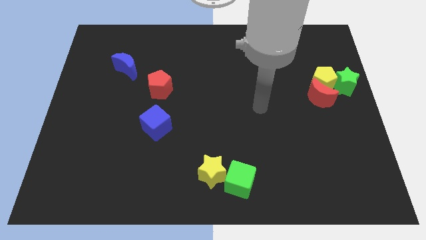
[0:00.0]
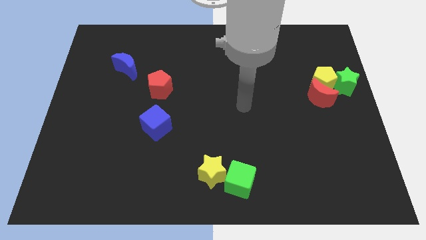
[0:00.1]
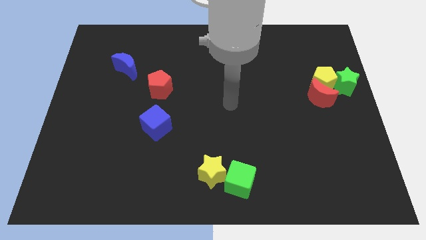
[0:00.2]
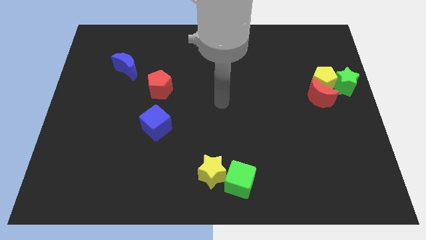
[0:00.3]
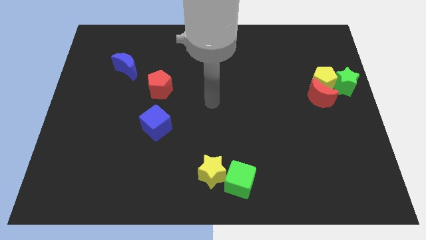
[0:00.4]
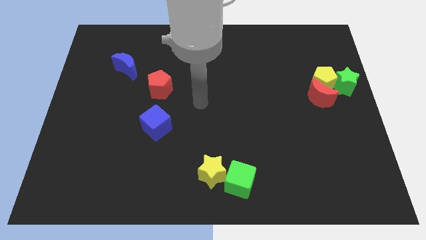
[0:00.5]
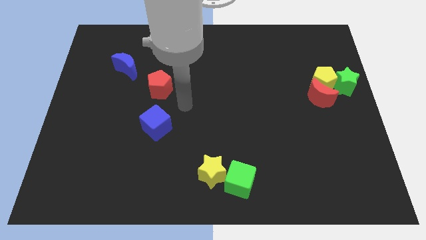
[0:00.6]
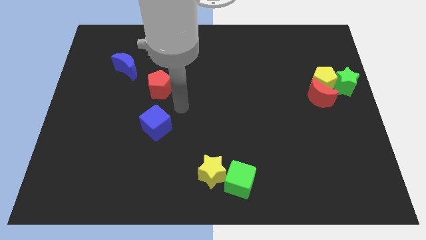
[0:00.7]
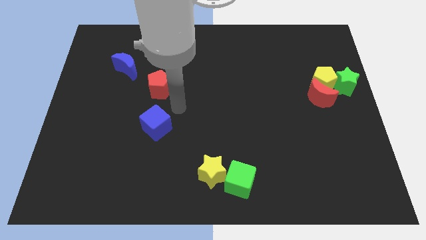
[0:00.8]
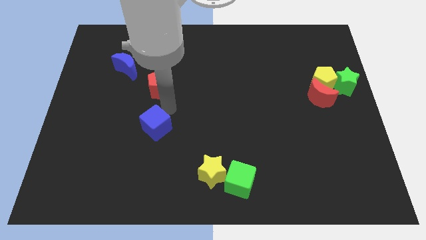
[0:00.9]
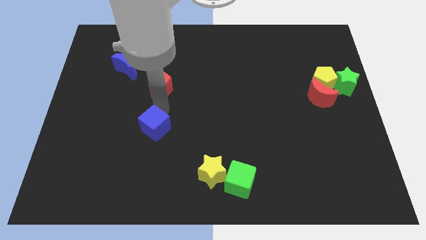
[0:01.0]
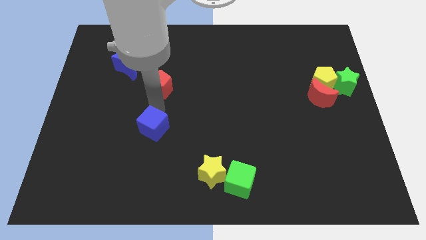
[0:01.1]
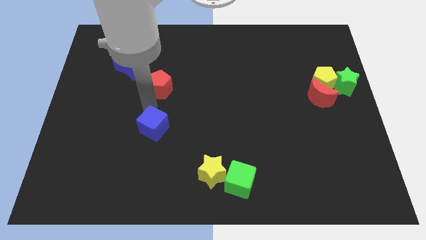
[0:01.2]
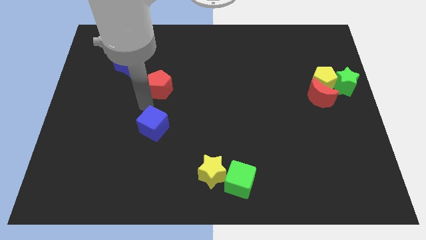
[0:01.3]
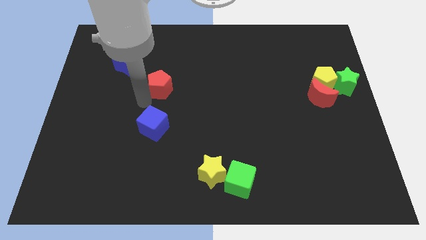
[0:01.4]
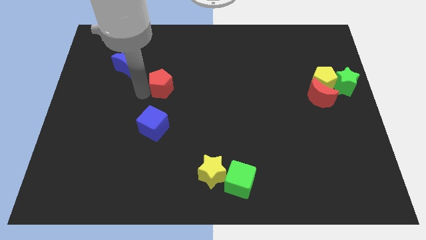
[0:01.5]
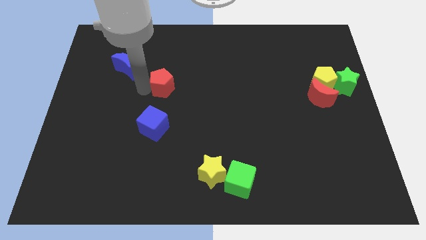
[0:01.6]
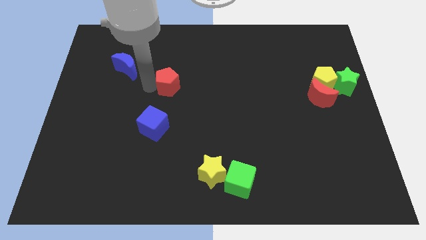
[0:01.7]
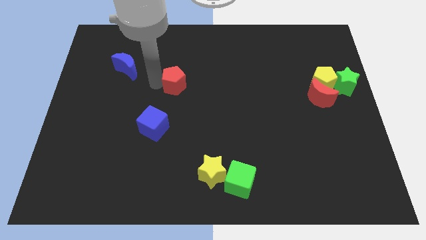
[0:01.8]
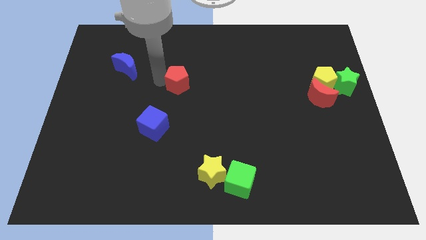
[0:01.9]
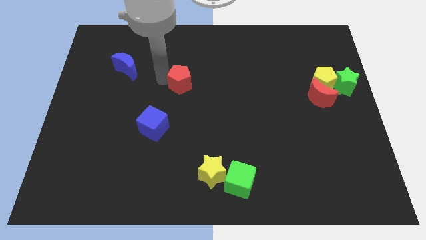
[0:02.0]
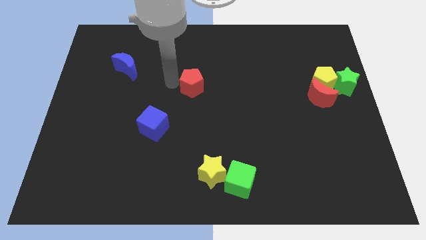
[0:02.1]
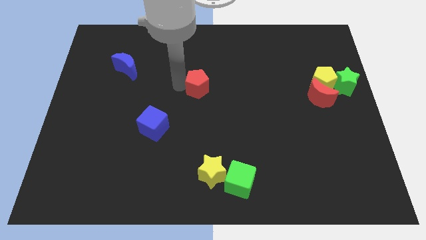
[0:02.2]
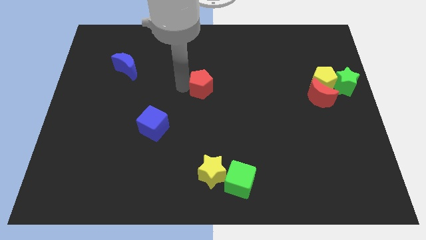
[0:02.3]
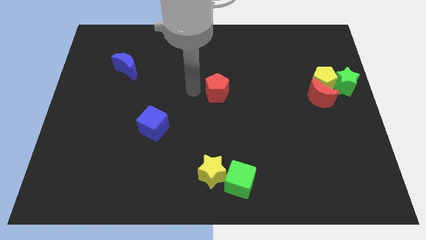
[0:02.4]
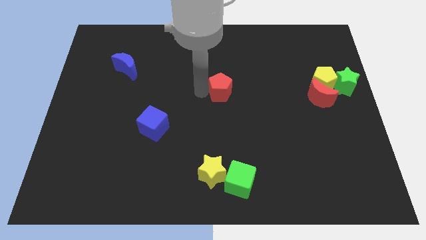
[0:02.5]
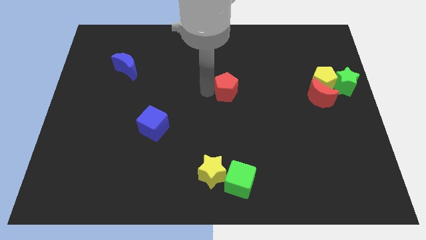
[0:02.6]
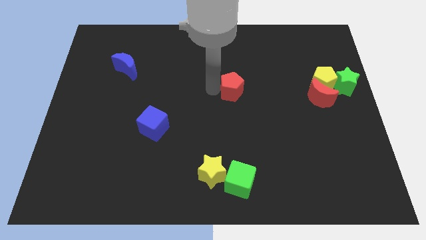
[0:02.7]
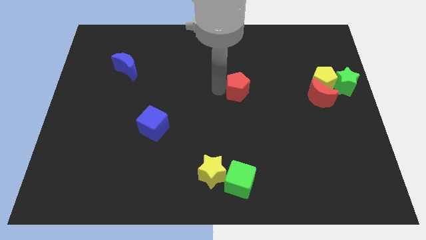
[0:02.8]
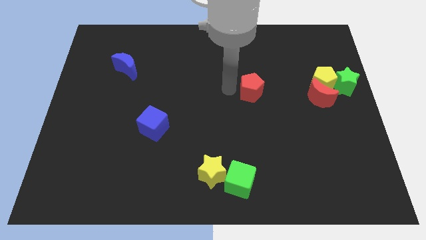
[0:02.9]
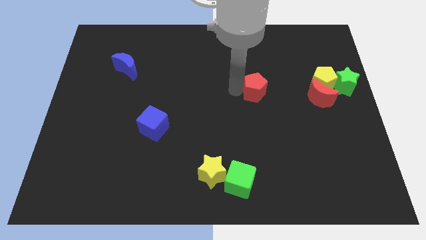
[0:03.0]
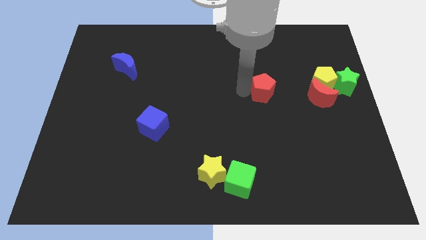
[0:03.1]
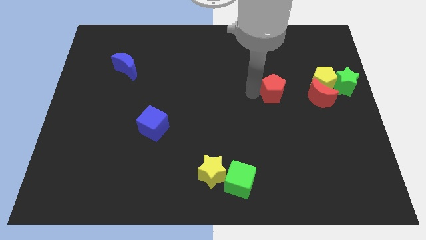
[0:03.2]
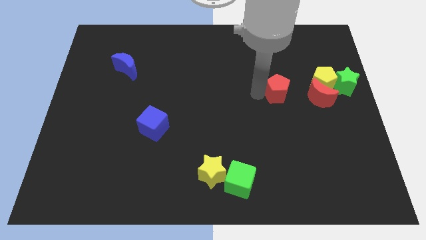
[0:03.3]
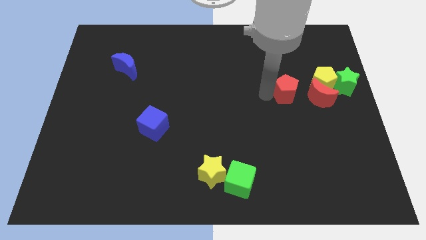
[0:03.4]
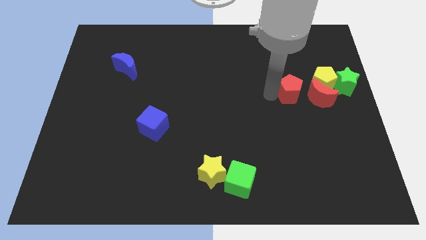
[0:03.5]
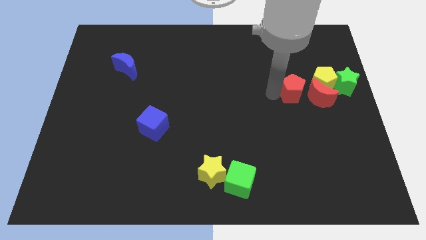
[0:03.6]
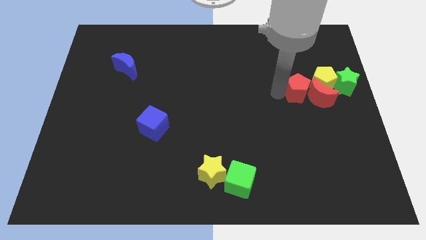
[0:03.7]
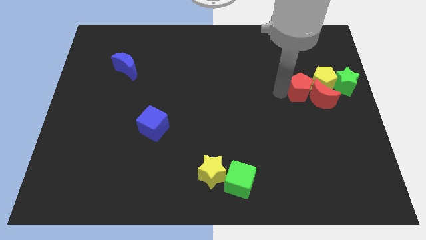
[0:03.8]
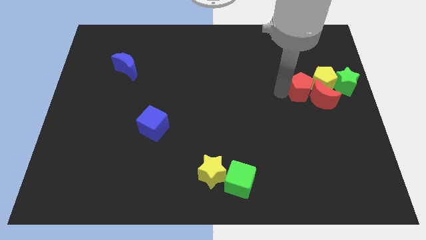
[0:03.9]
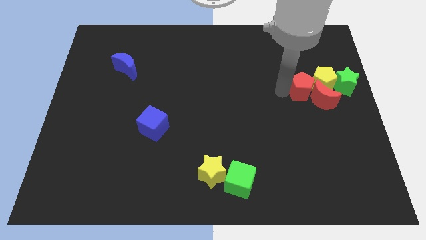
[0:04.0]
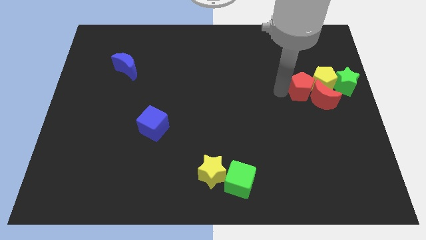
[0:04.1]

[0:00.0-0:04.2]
move the red pentagon into the red crescent

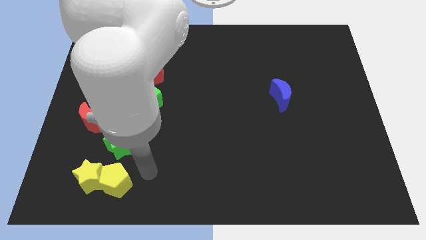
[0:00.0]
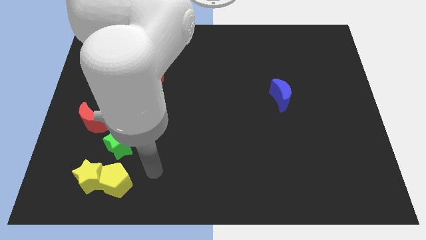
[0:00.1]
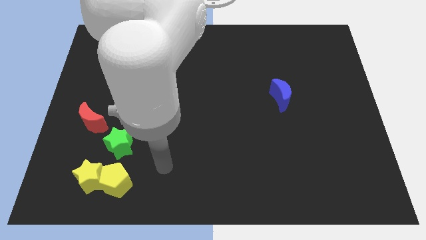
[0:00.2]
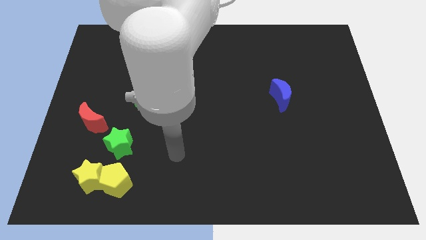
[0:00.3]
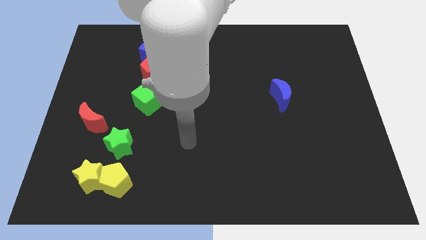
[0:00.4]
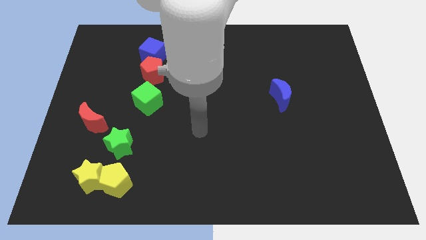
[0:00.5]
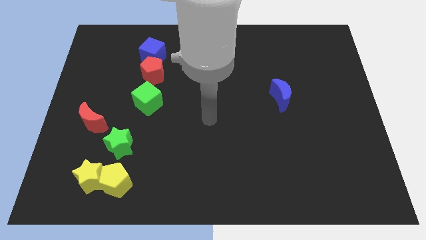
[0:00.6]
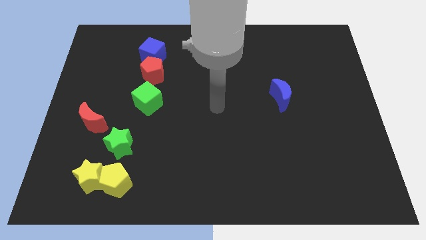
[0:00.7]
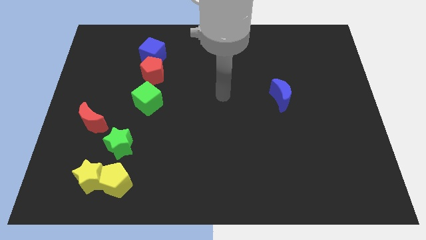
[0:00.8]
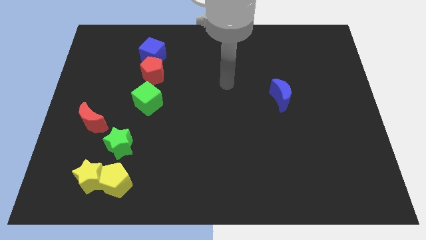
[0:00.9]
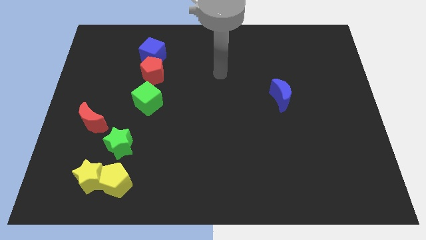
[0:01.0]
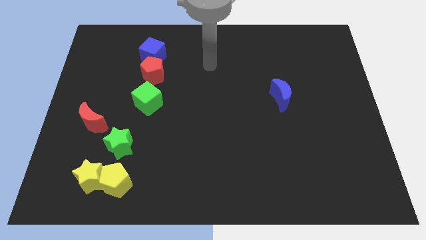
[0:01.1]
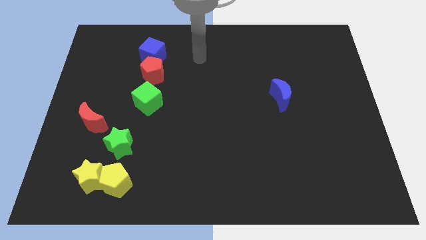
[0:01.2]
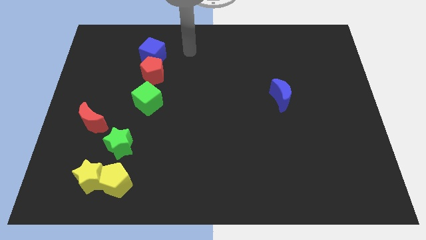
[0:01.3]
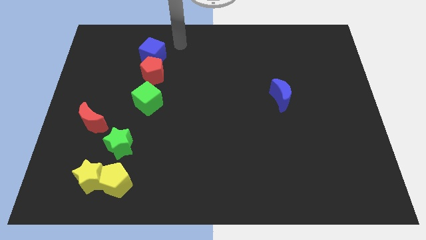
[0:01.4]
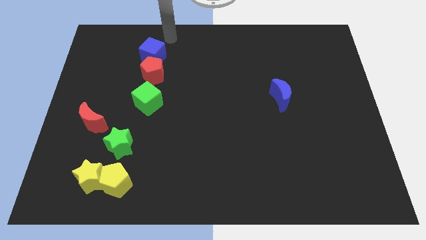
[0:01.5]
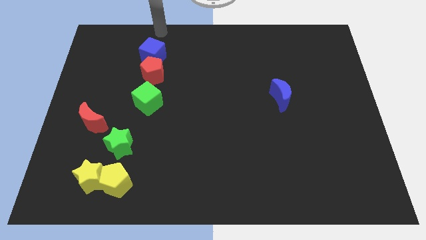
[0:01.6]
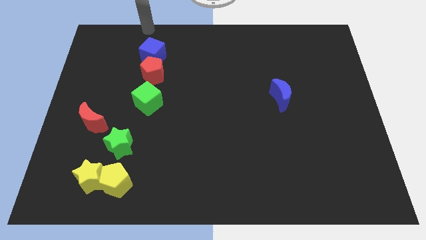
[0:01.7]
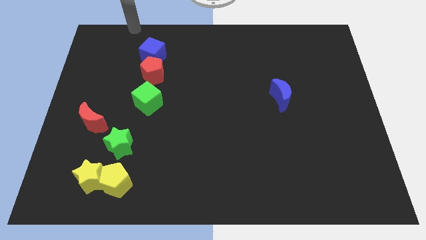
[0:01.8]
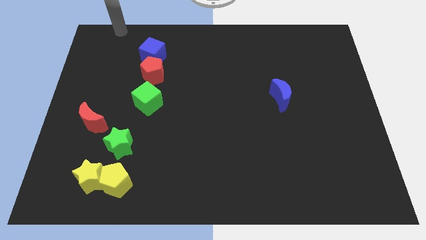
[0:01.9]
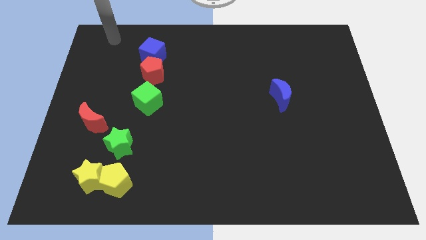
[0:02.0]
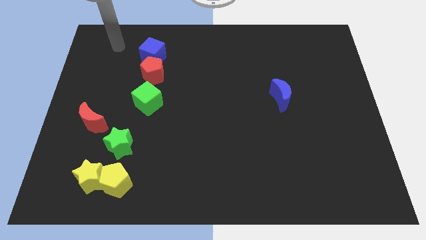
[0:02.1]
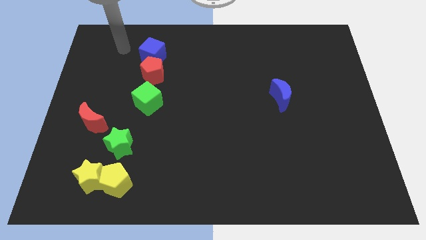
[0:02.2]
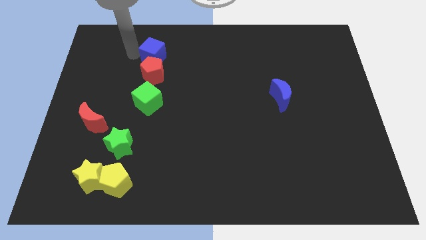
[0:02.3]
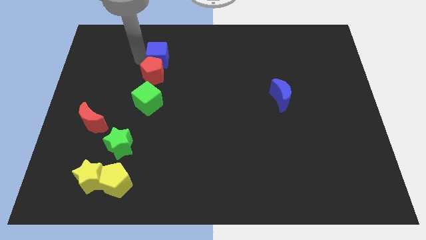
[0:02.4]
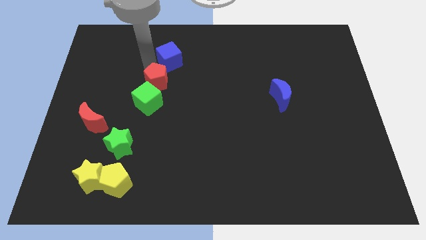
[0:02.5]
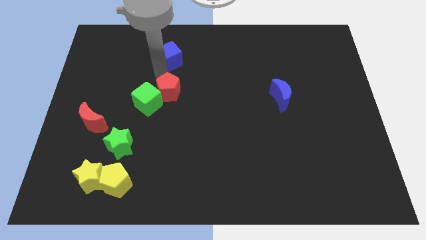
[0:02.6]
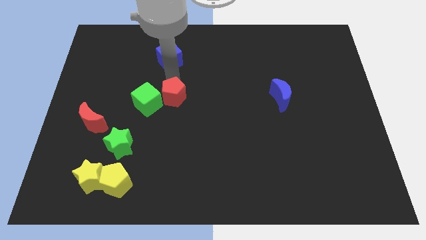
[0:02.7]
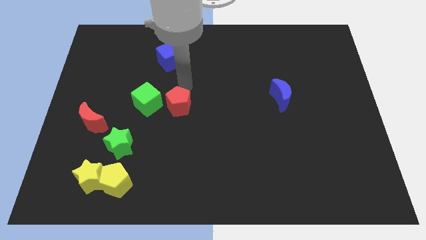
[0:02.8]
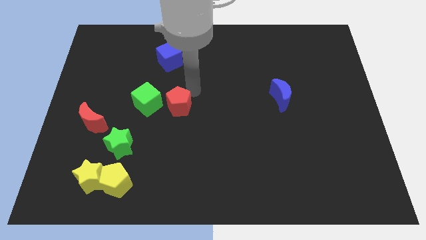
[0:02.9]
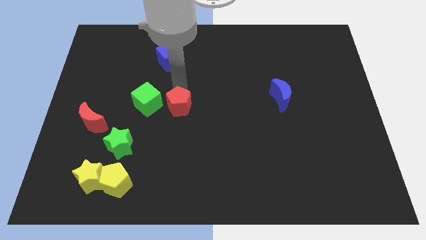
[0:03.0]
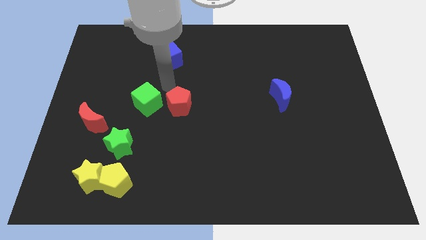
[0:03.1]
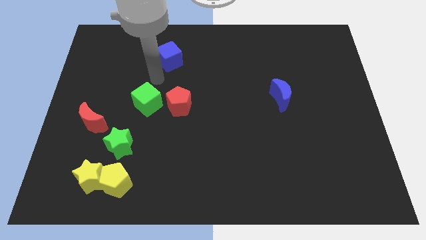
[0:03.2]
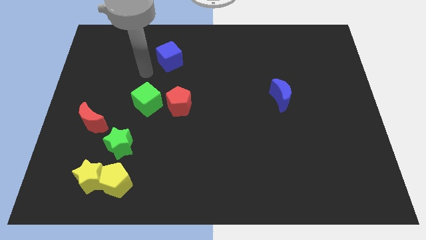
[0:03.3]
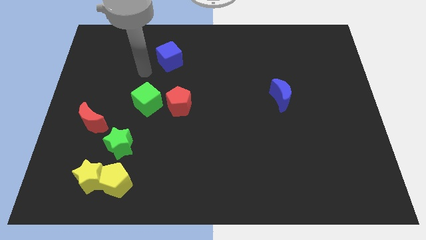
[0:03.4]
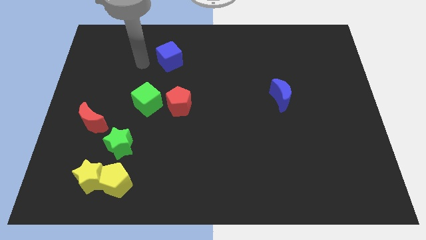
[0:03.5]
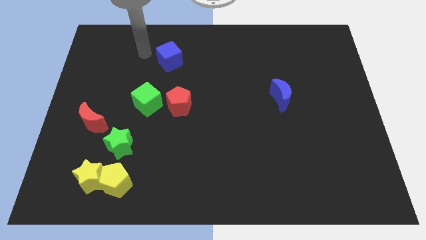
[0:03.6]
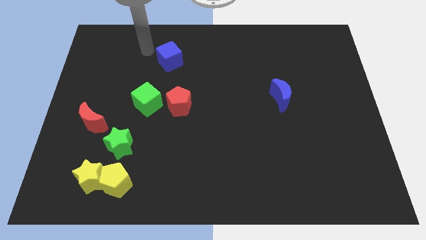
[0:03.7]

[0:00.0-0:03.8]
place the red pentagon in between the blue moon and green cube

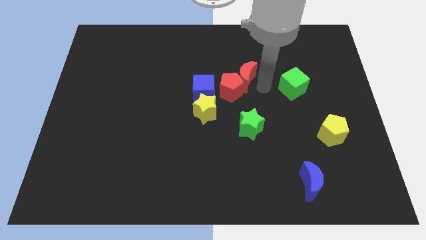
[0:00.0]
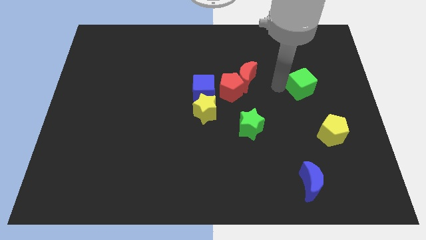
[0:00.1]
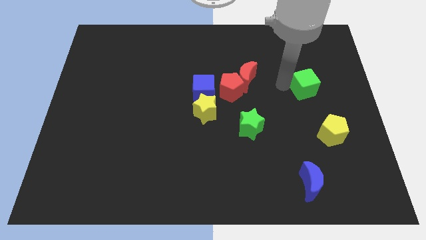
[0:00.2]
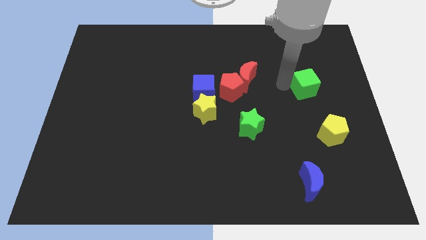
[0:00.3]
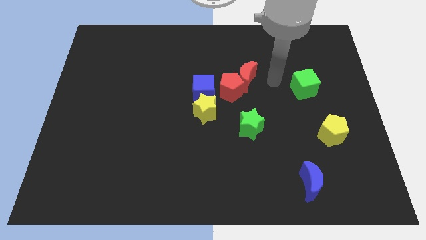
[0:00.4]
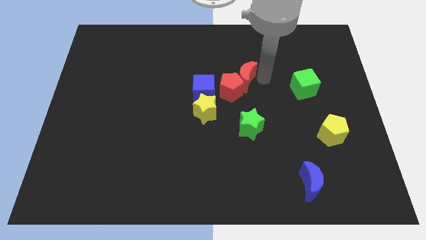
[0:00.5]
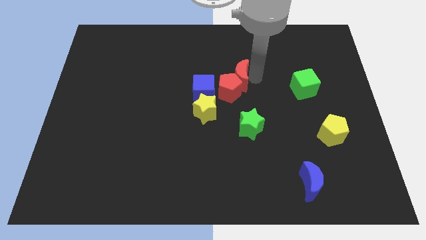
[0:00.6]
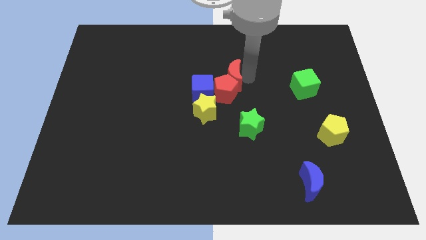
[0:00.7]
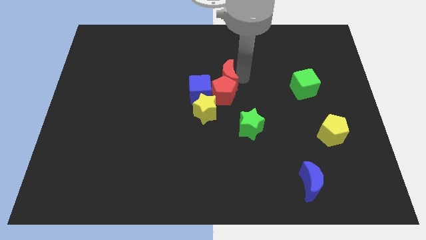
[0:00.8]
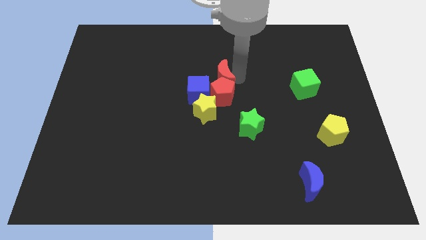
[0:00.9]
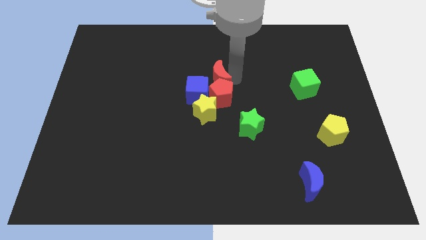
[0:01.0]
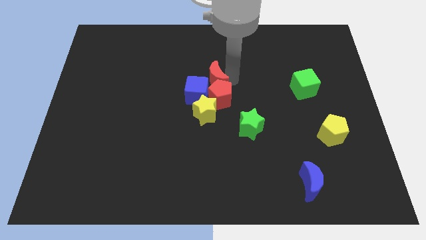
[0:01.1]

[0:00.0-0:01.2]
push the red crescent to the top of the red pentagon
